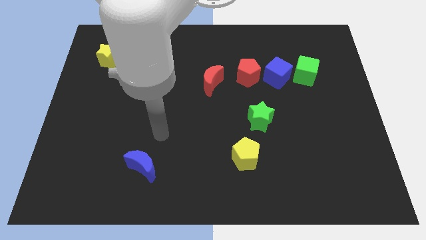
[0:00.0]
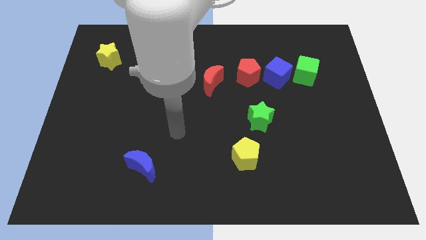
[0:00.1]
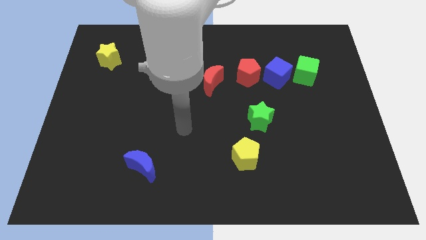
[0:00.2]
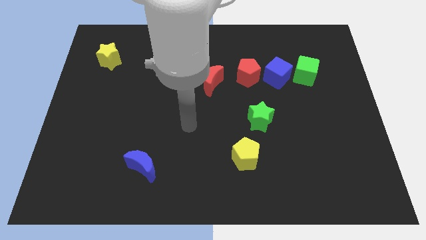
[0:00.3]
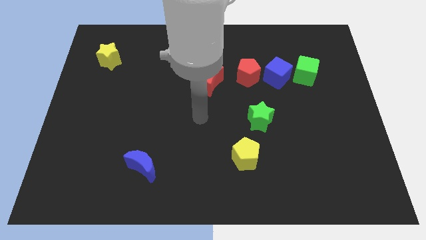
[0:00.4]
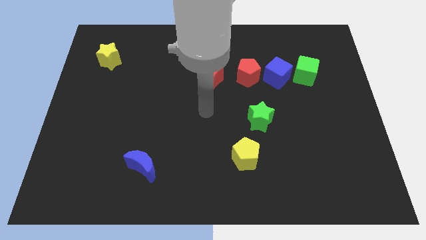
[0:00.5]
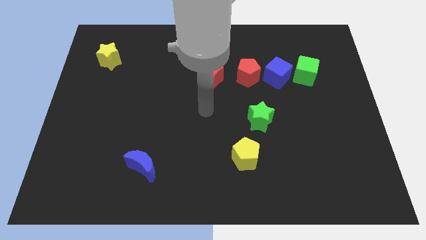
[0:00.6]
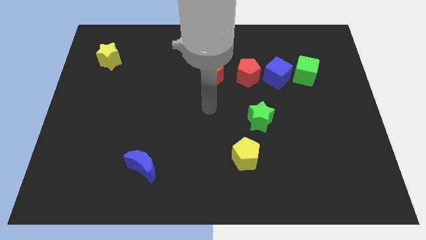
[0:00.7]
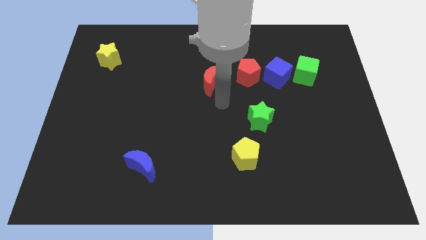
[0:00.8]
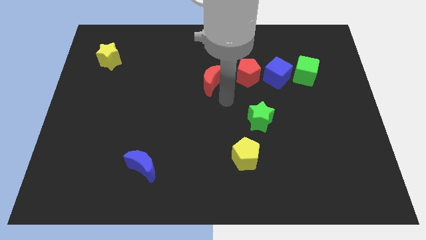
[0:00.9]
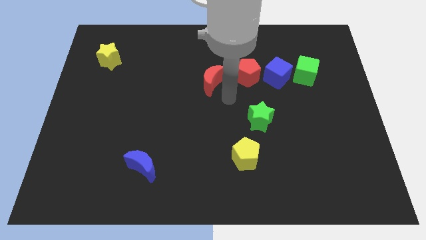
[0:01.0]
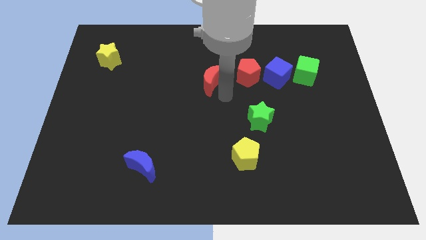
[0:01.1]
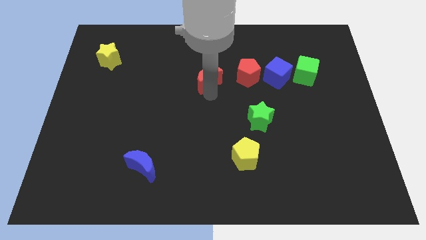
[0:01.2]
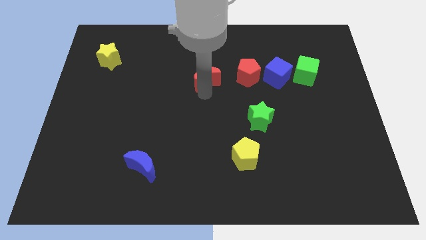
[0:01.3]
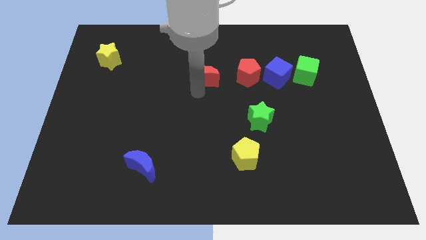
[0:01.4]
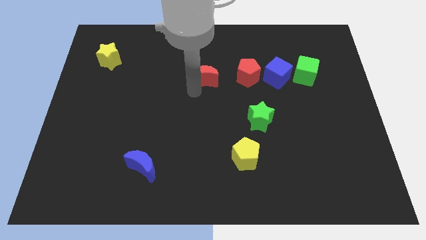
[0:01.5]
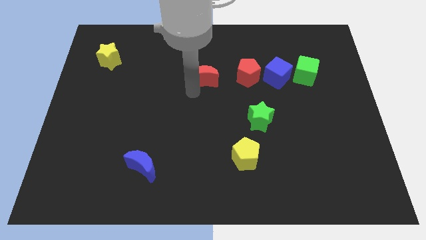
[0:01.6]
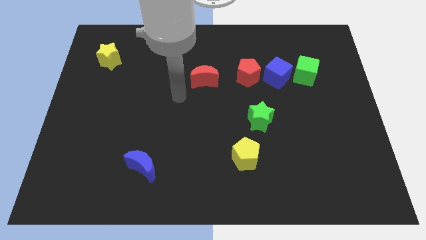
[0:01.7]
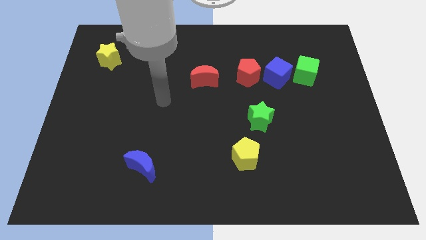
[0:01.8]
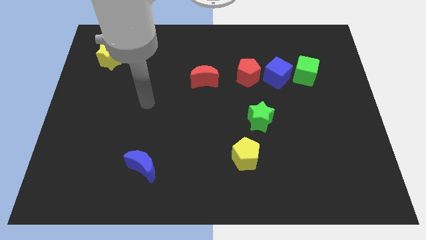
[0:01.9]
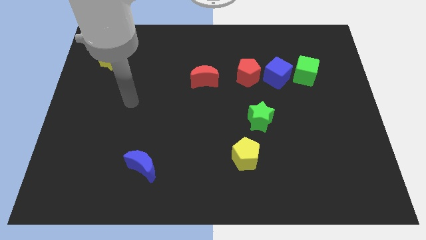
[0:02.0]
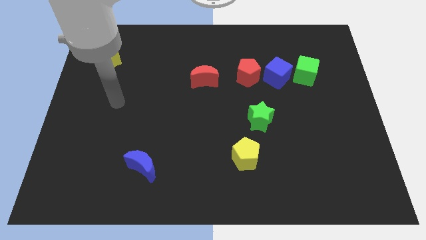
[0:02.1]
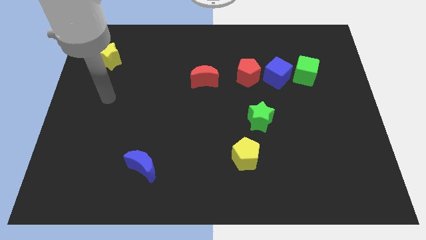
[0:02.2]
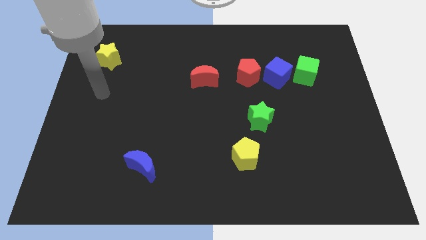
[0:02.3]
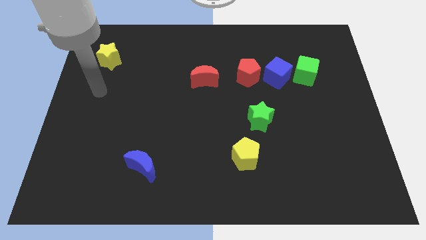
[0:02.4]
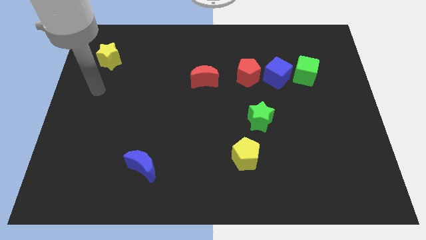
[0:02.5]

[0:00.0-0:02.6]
slightly move the red crescent parallel left to the red pentagon

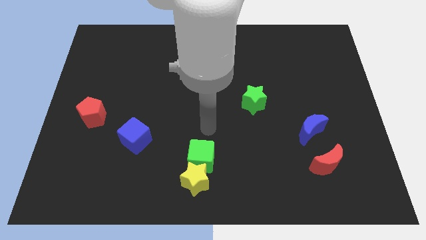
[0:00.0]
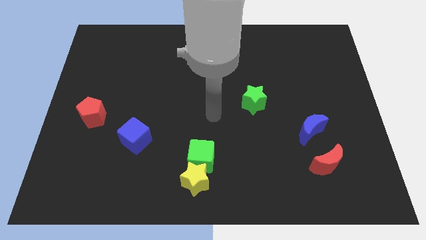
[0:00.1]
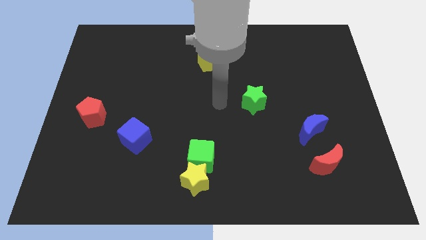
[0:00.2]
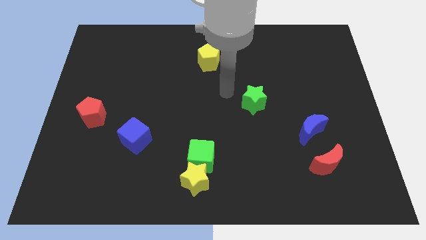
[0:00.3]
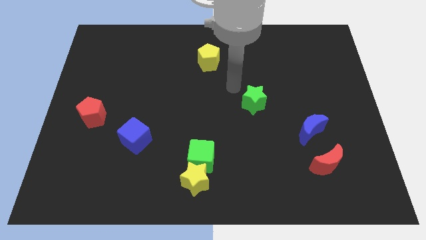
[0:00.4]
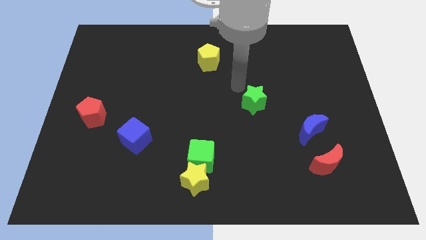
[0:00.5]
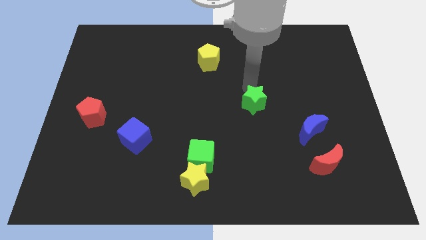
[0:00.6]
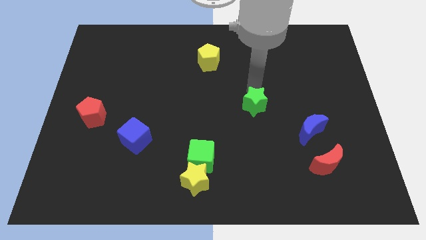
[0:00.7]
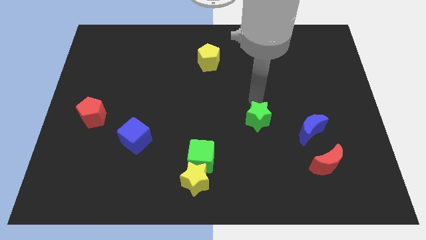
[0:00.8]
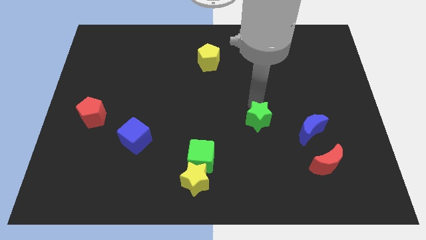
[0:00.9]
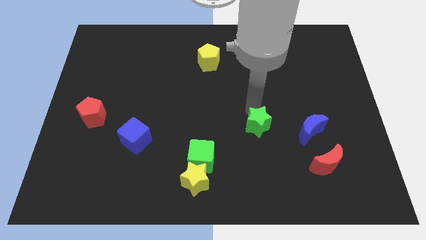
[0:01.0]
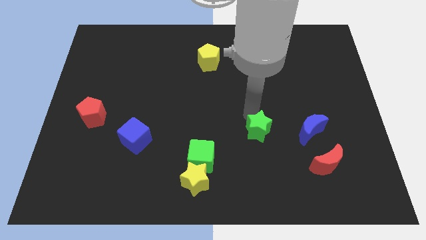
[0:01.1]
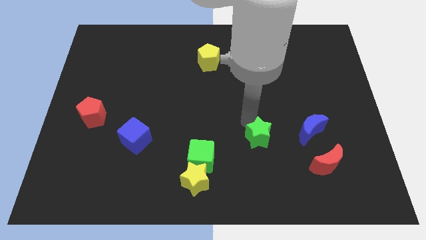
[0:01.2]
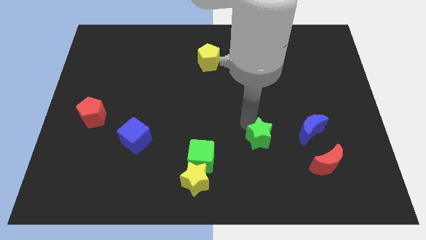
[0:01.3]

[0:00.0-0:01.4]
move the green star to the left of the blue crescent

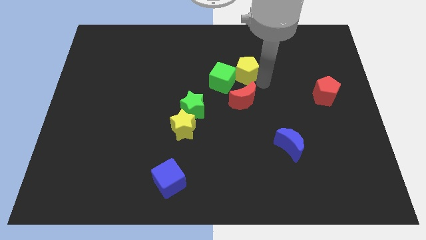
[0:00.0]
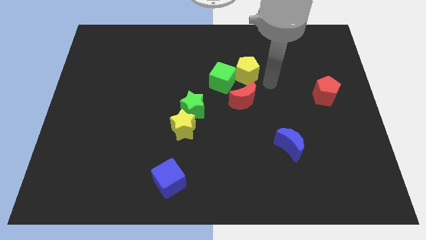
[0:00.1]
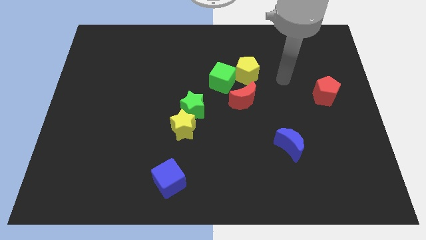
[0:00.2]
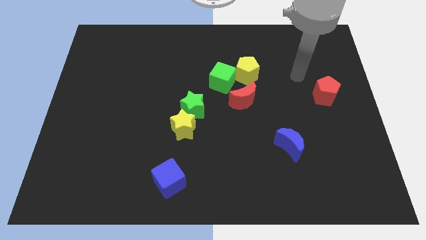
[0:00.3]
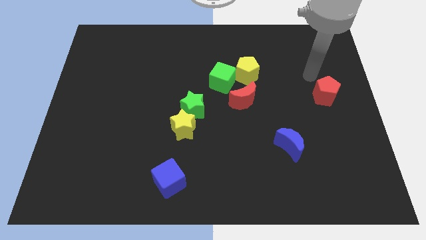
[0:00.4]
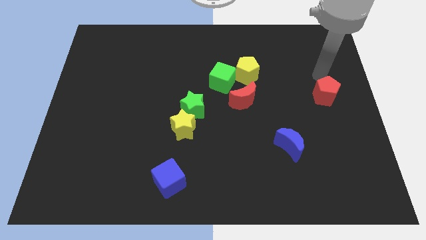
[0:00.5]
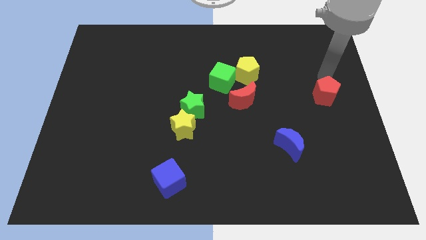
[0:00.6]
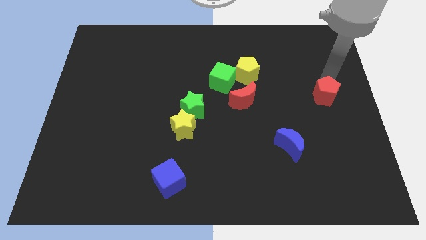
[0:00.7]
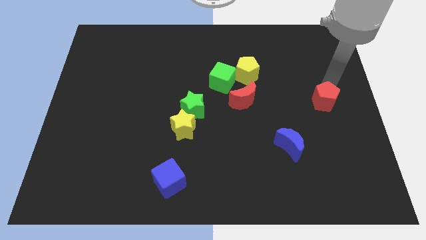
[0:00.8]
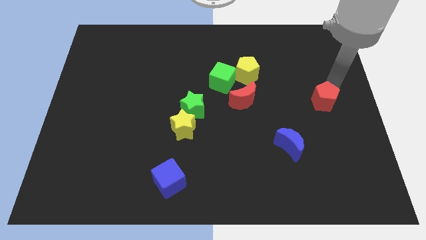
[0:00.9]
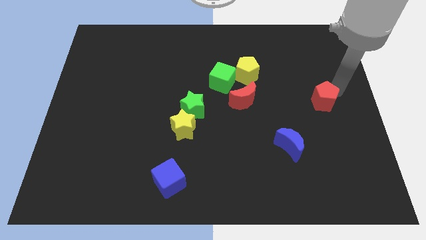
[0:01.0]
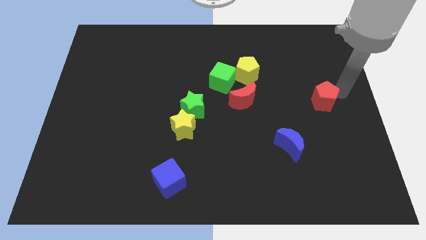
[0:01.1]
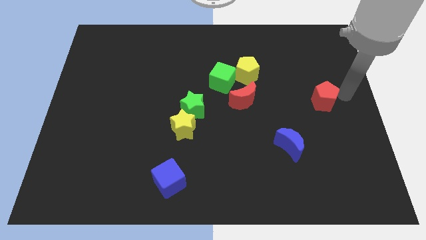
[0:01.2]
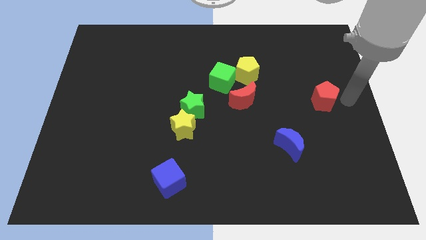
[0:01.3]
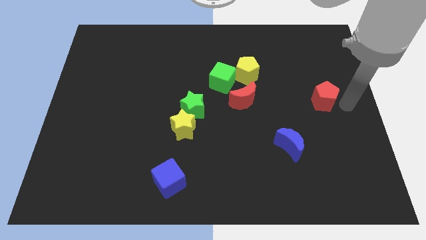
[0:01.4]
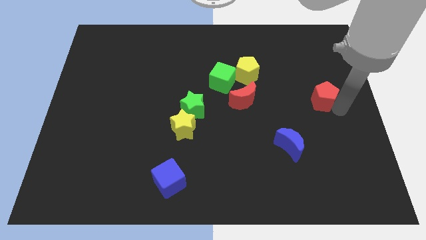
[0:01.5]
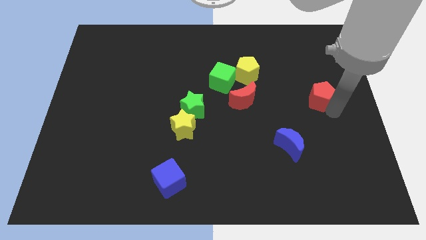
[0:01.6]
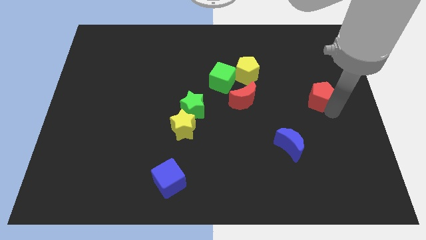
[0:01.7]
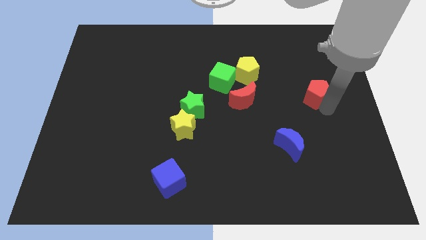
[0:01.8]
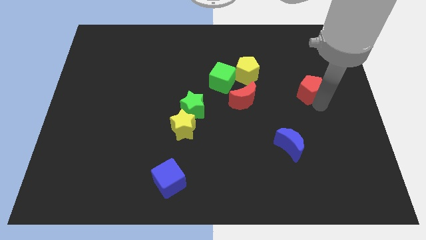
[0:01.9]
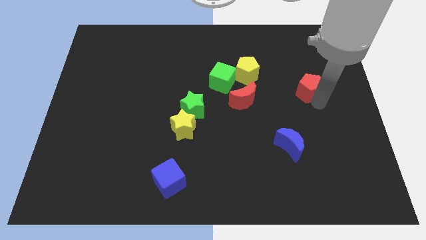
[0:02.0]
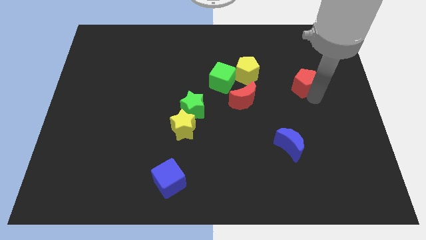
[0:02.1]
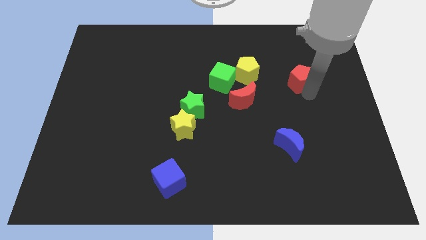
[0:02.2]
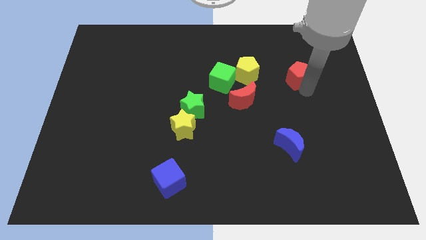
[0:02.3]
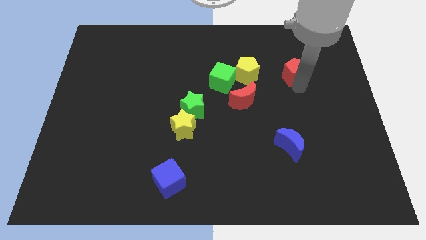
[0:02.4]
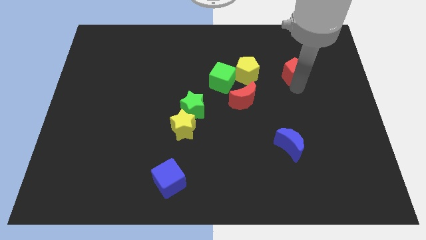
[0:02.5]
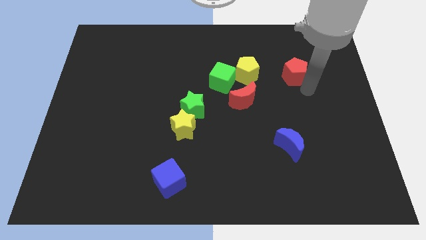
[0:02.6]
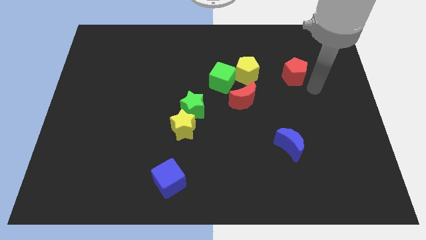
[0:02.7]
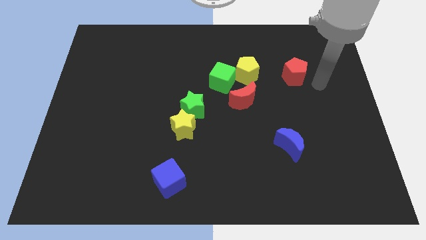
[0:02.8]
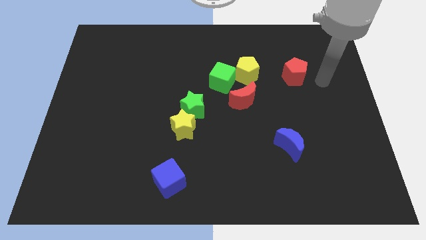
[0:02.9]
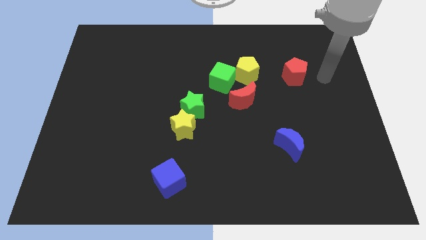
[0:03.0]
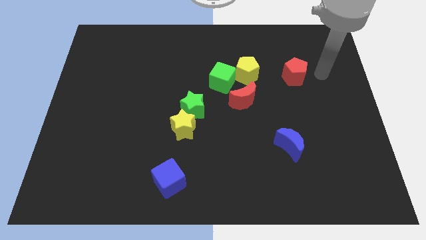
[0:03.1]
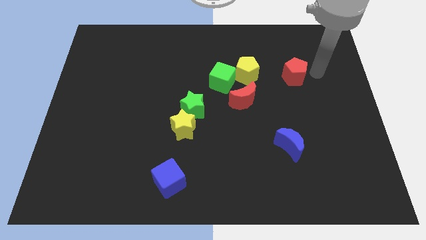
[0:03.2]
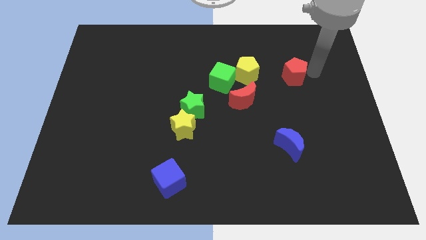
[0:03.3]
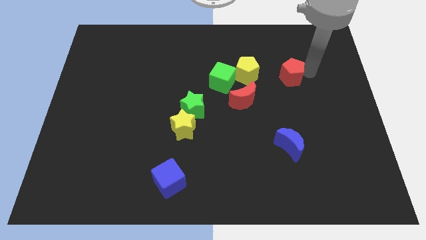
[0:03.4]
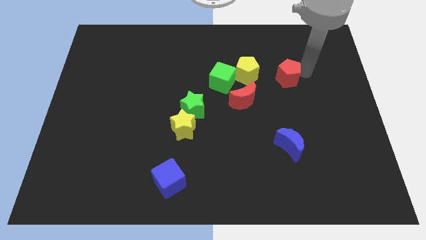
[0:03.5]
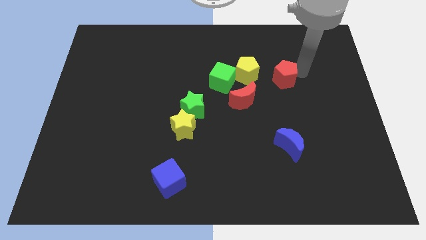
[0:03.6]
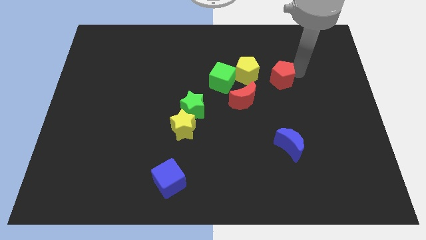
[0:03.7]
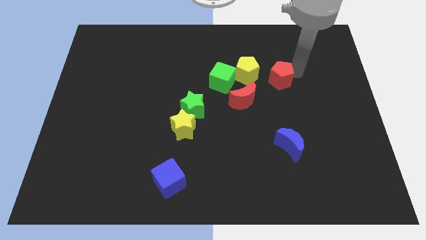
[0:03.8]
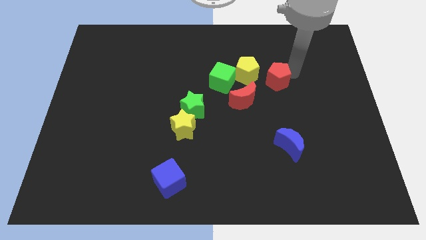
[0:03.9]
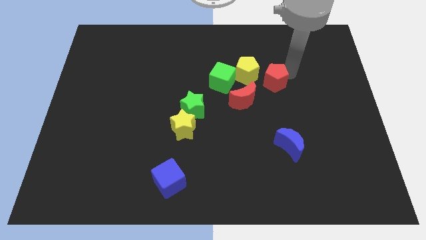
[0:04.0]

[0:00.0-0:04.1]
move the red pentagon towards the group of blocks

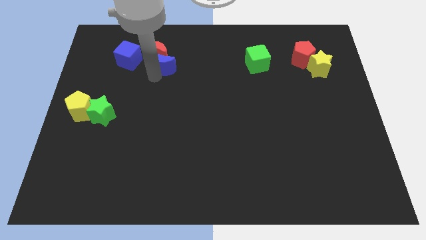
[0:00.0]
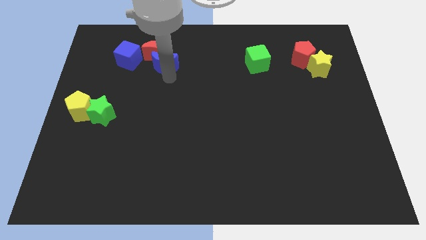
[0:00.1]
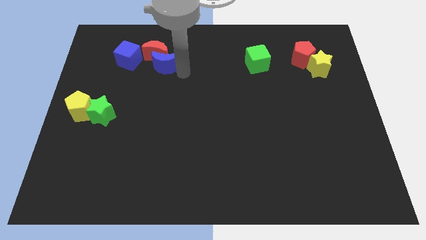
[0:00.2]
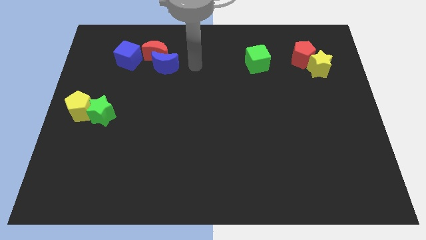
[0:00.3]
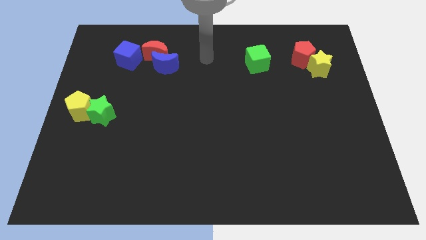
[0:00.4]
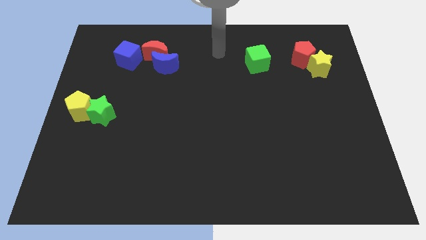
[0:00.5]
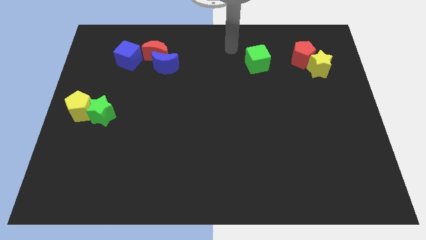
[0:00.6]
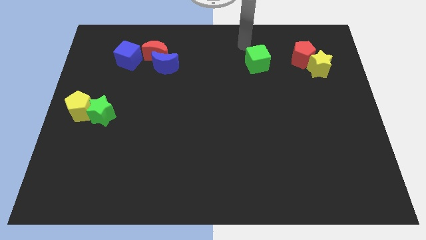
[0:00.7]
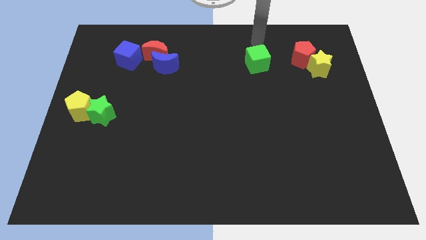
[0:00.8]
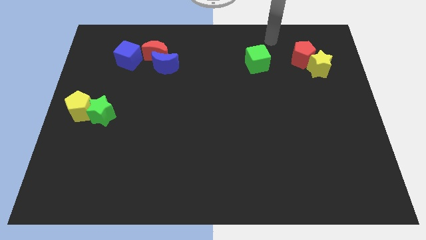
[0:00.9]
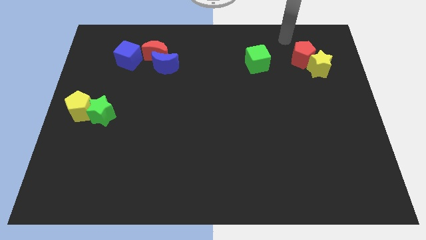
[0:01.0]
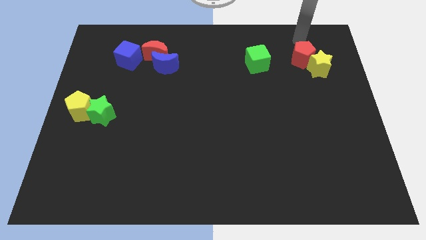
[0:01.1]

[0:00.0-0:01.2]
move your arm away from the blue moon
